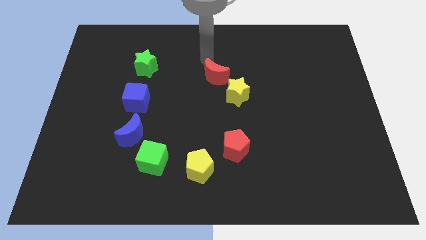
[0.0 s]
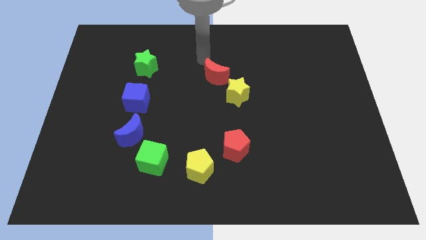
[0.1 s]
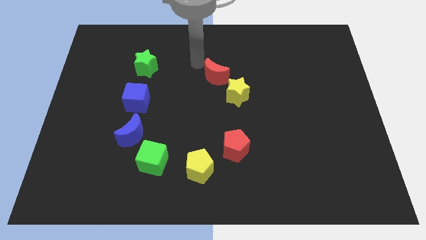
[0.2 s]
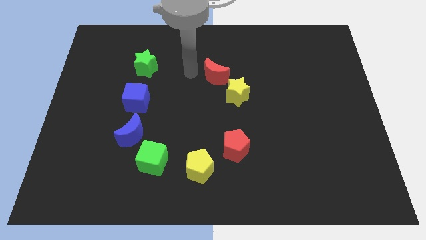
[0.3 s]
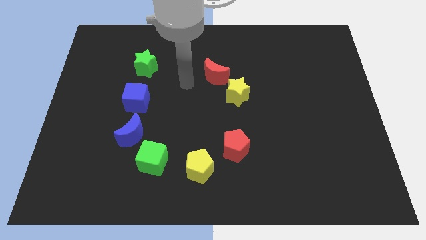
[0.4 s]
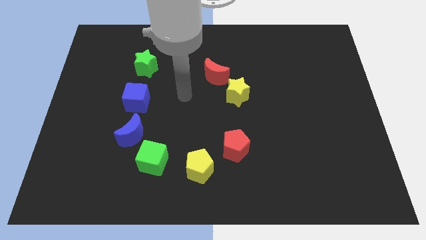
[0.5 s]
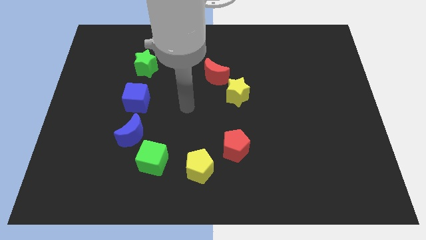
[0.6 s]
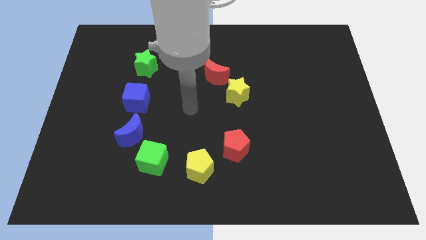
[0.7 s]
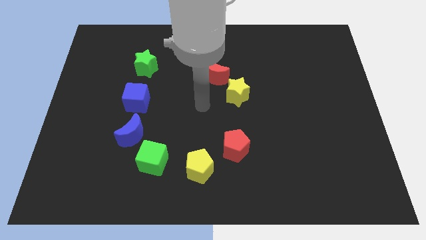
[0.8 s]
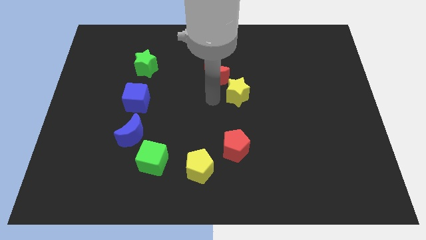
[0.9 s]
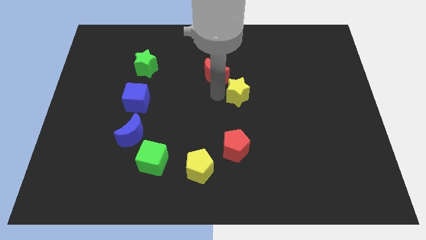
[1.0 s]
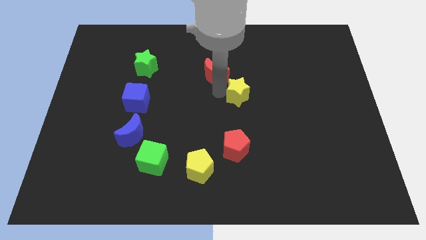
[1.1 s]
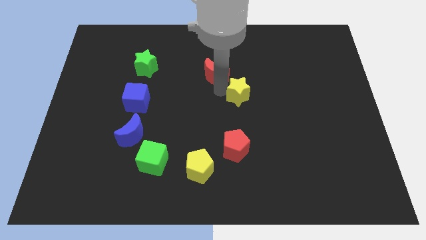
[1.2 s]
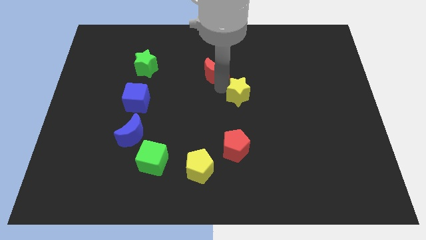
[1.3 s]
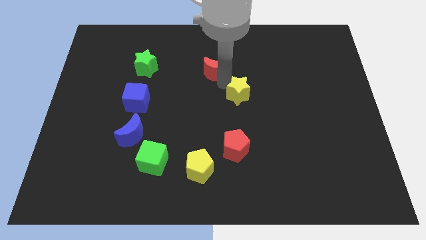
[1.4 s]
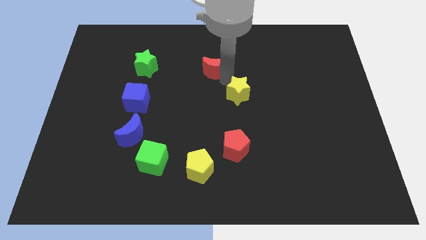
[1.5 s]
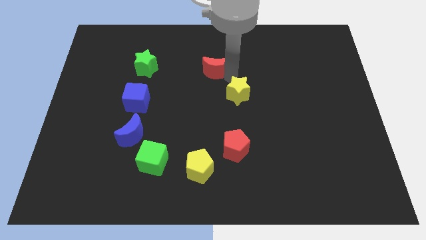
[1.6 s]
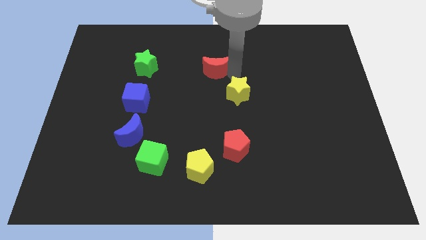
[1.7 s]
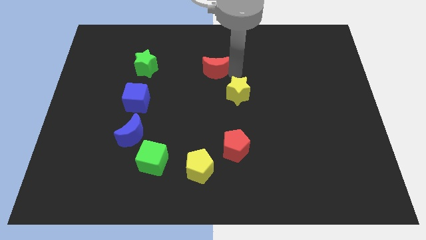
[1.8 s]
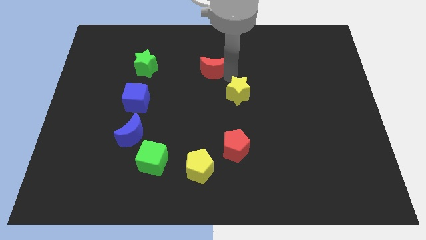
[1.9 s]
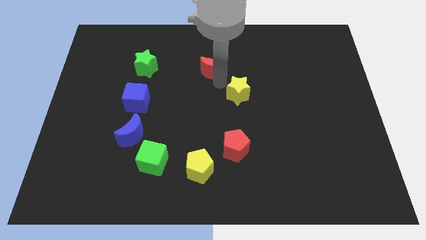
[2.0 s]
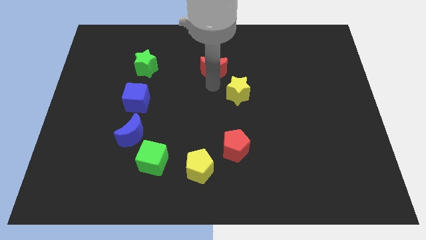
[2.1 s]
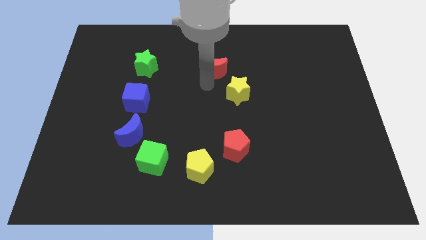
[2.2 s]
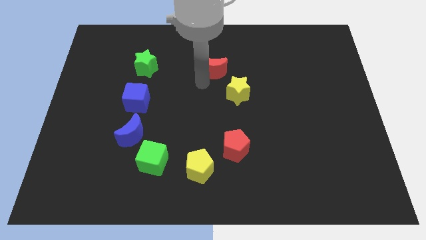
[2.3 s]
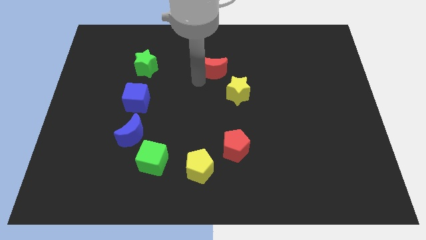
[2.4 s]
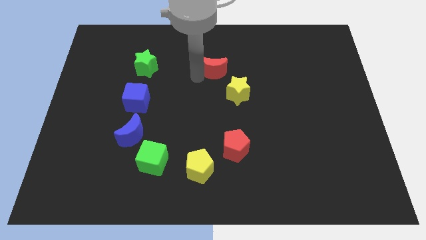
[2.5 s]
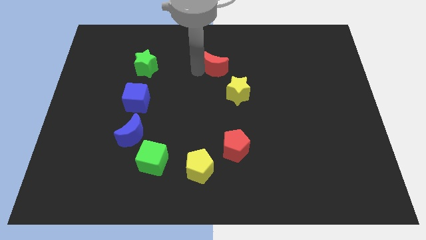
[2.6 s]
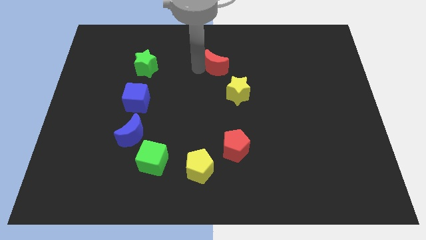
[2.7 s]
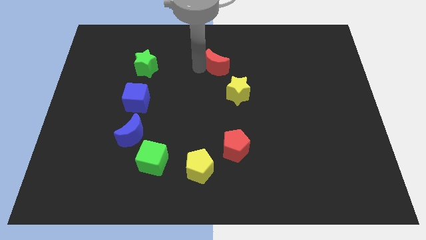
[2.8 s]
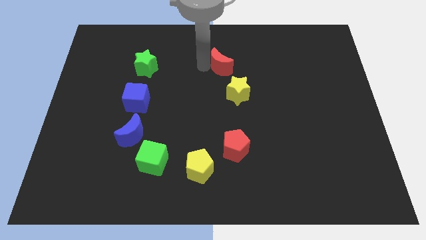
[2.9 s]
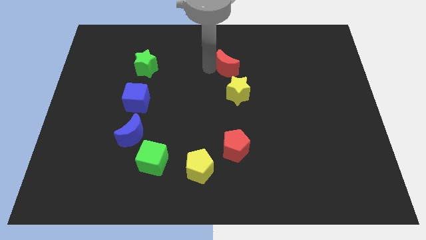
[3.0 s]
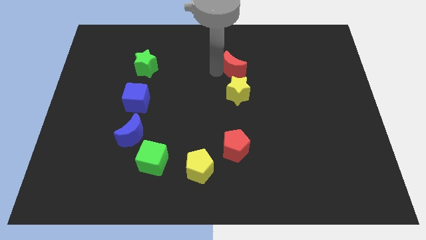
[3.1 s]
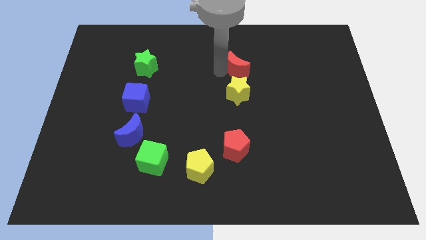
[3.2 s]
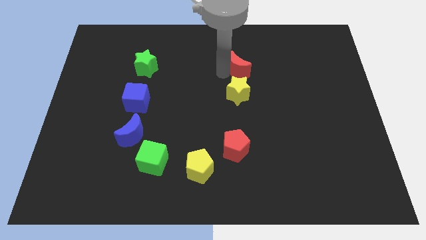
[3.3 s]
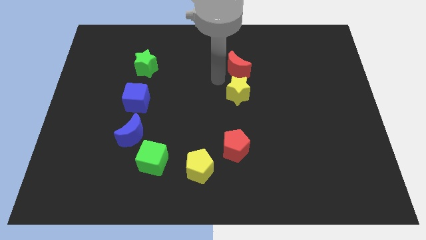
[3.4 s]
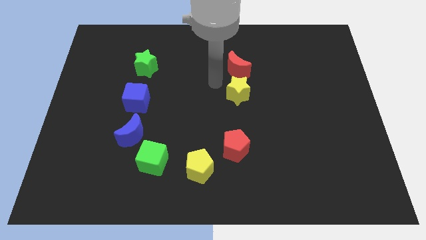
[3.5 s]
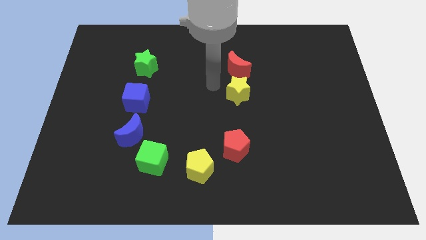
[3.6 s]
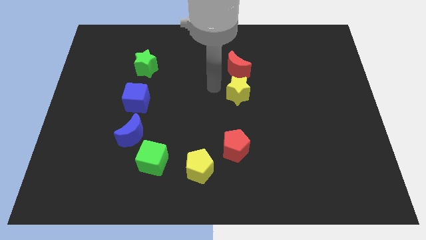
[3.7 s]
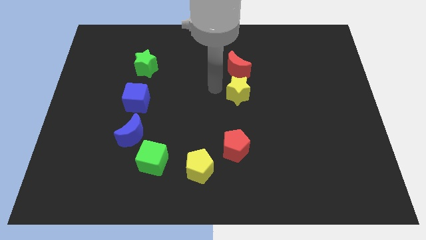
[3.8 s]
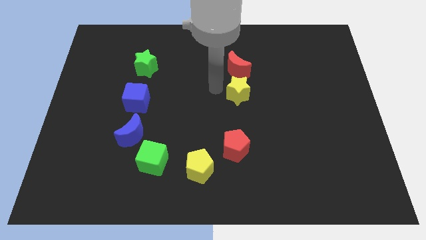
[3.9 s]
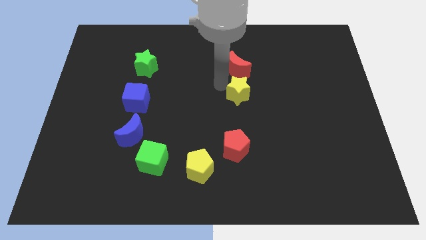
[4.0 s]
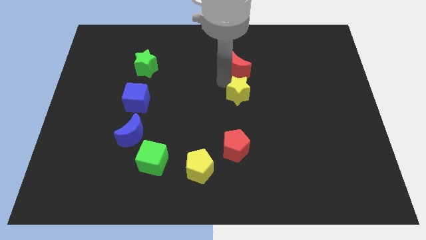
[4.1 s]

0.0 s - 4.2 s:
move the red crescent above the yellow star

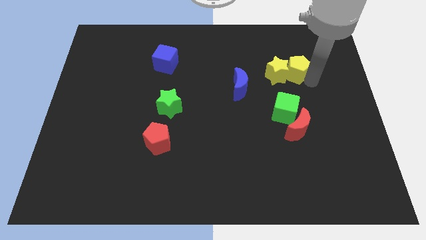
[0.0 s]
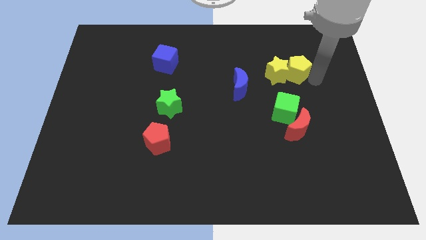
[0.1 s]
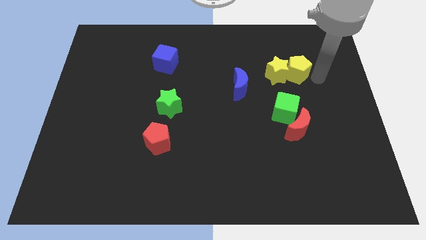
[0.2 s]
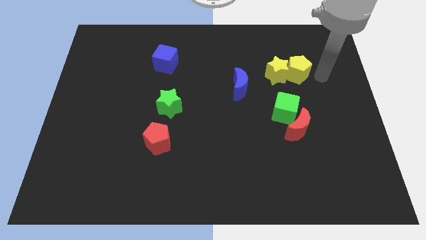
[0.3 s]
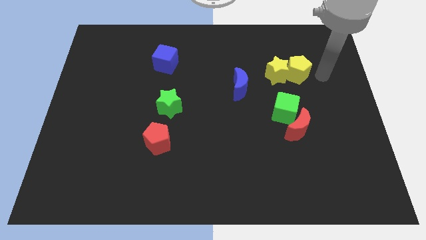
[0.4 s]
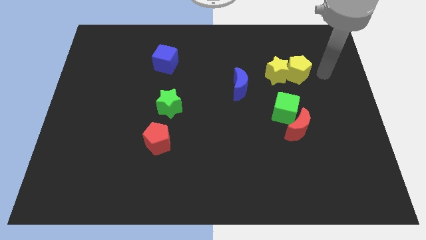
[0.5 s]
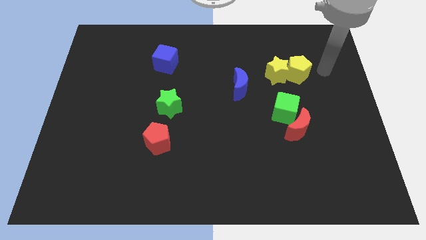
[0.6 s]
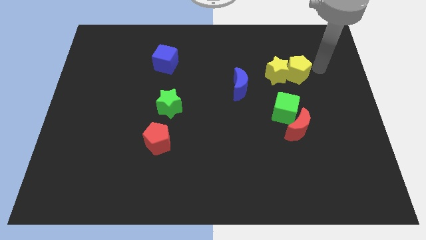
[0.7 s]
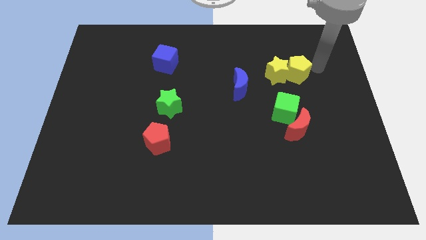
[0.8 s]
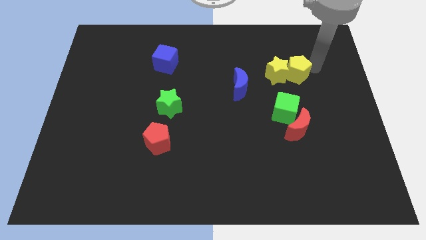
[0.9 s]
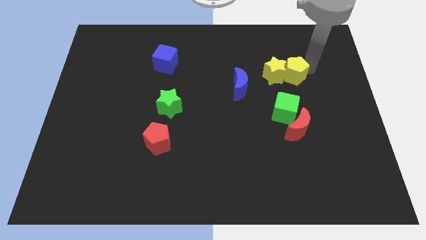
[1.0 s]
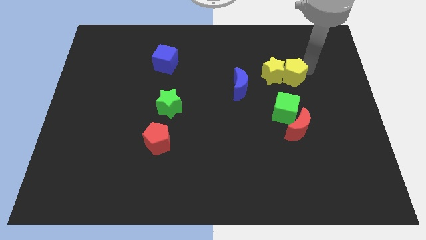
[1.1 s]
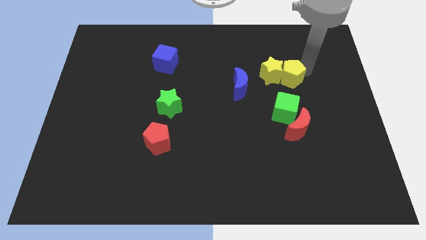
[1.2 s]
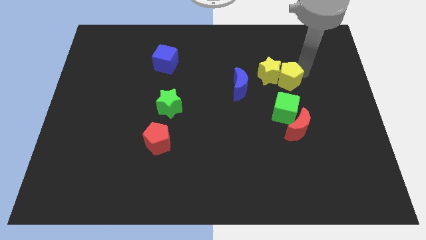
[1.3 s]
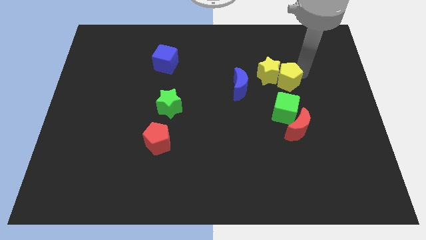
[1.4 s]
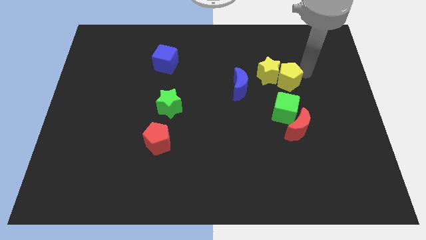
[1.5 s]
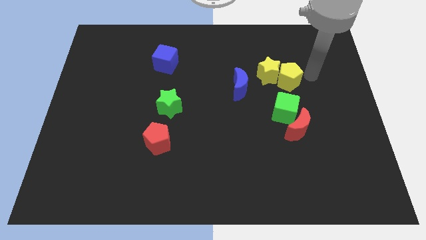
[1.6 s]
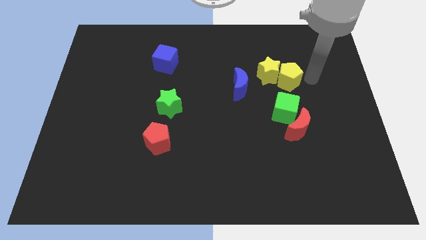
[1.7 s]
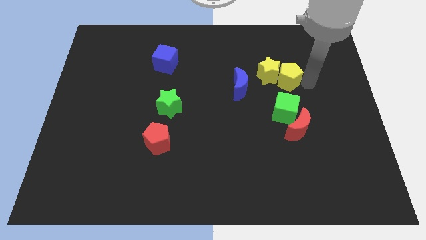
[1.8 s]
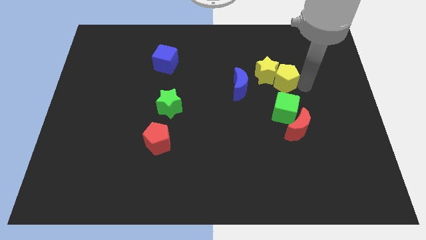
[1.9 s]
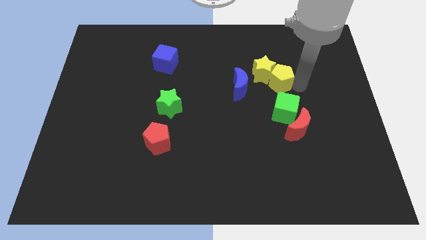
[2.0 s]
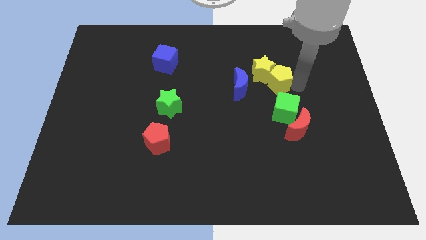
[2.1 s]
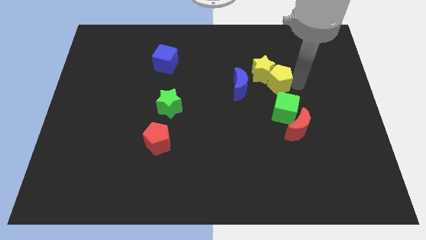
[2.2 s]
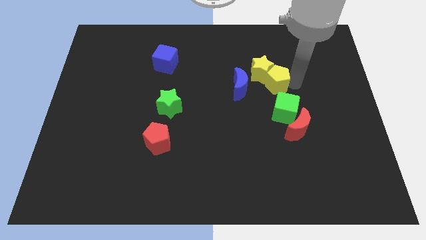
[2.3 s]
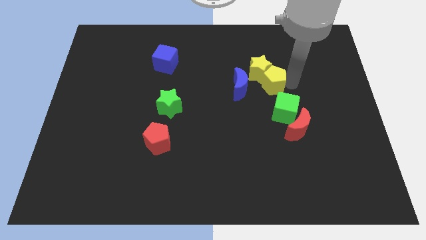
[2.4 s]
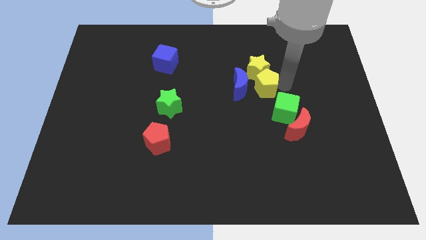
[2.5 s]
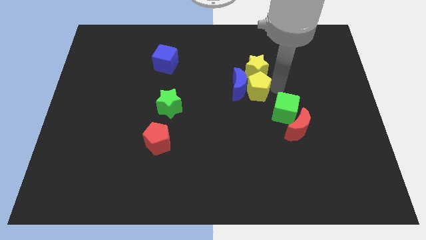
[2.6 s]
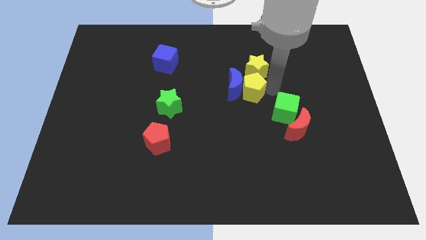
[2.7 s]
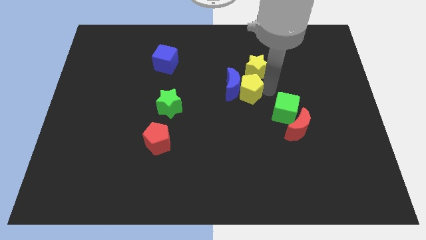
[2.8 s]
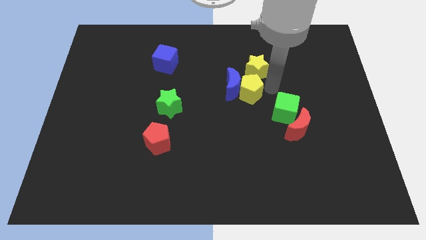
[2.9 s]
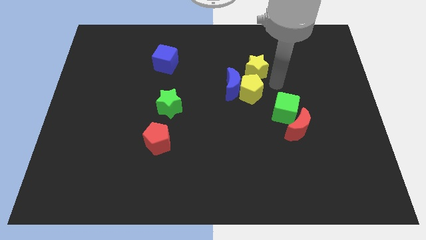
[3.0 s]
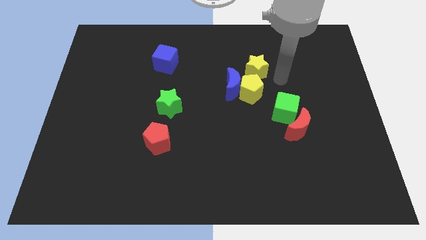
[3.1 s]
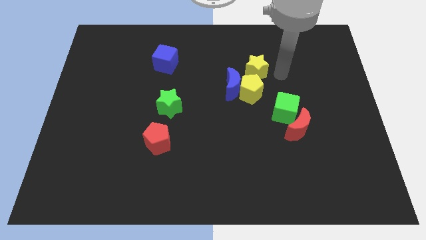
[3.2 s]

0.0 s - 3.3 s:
place the yellow pentagon right to the blue moon

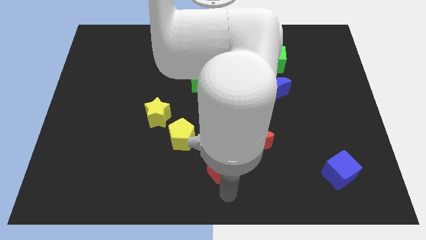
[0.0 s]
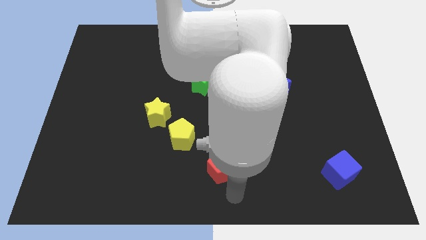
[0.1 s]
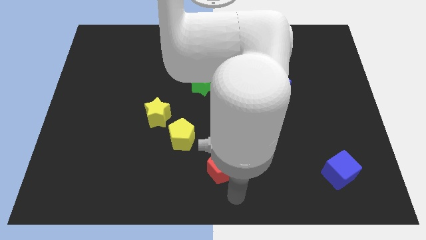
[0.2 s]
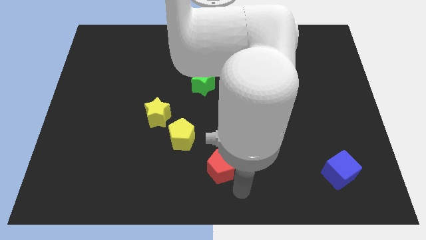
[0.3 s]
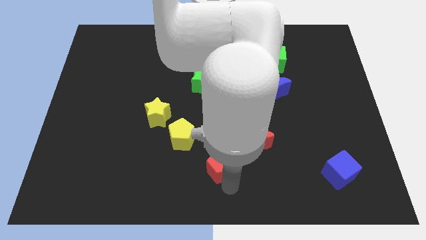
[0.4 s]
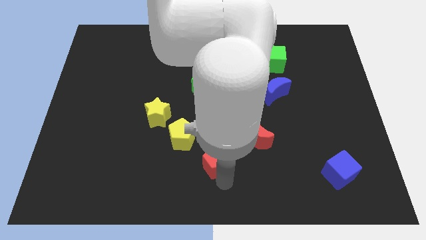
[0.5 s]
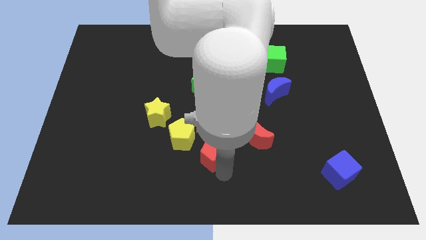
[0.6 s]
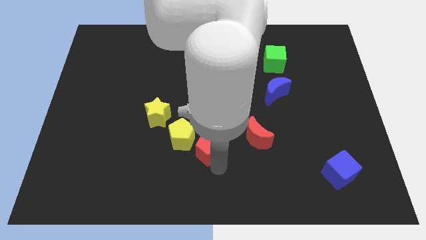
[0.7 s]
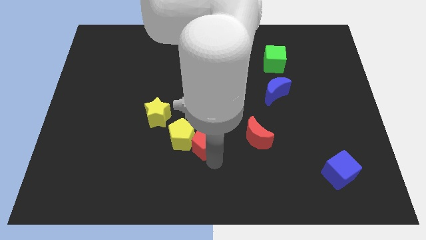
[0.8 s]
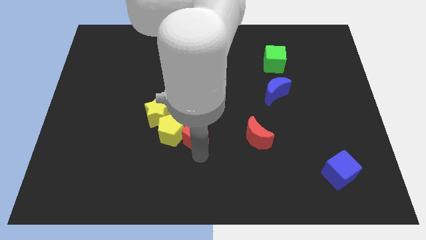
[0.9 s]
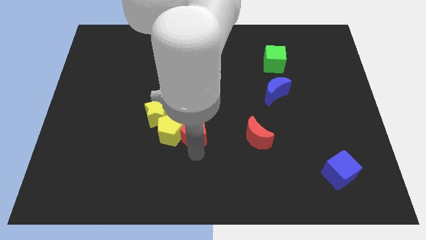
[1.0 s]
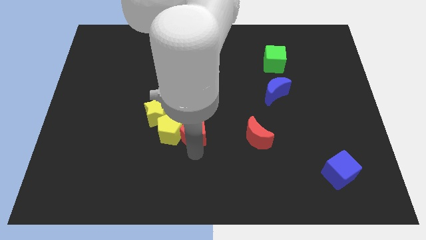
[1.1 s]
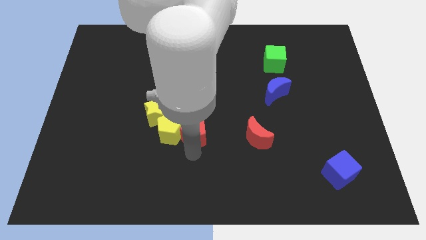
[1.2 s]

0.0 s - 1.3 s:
push red pentagon into yellow pentagon

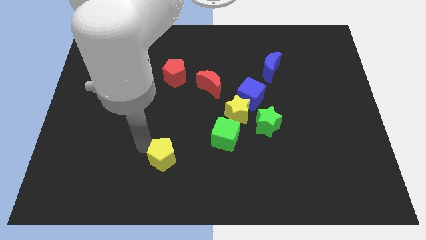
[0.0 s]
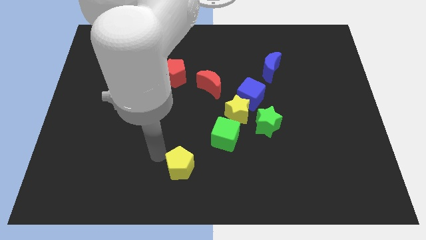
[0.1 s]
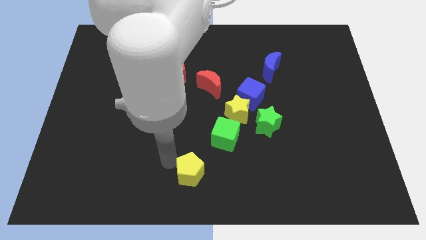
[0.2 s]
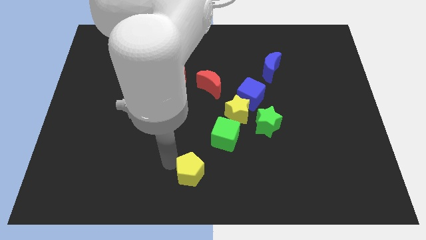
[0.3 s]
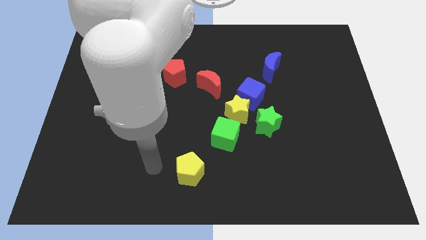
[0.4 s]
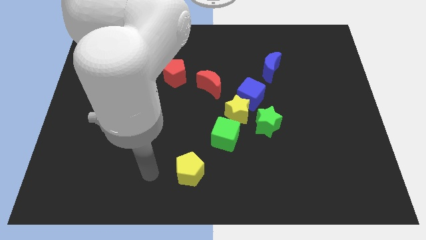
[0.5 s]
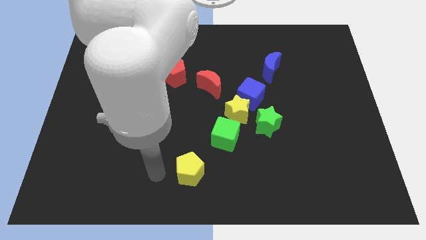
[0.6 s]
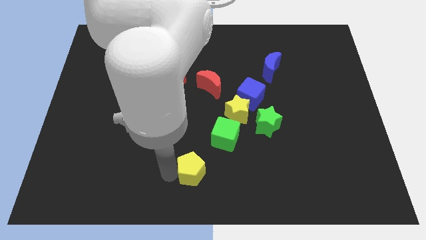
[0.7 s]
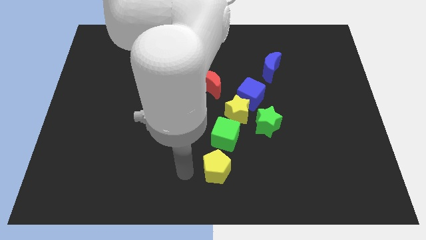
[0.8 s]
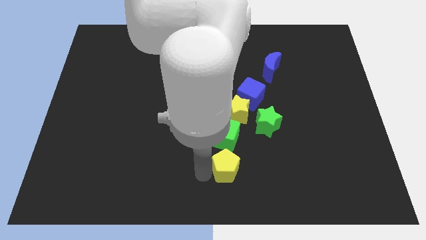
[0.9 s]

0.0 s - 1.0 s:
push the yellow pentagon below the green cube
